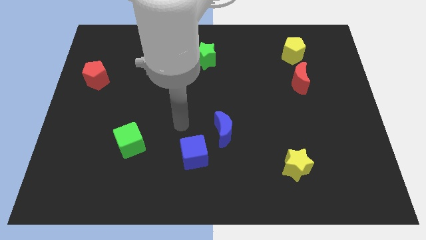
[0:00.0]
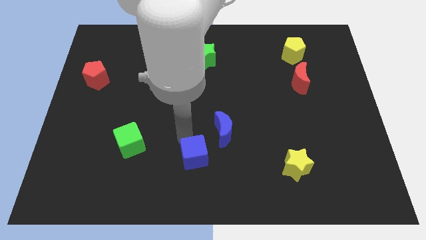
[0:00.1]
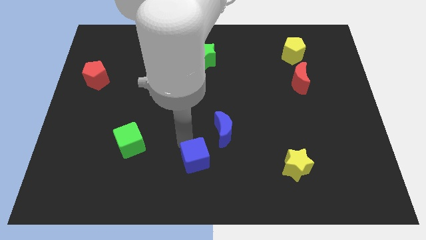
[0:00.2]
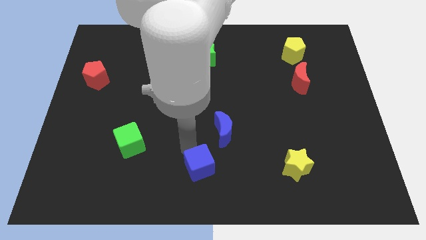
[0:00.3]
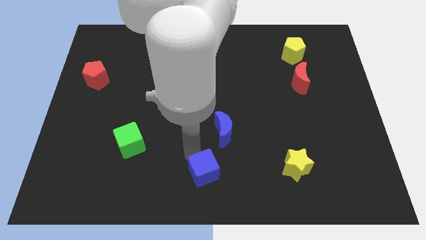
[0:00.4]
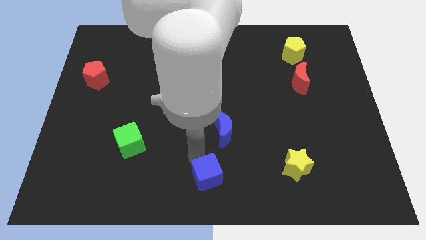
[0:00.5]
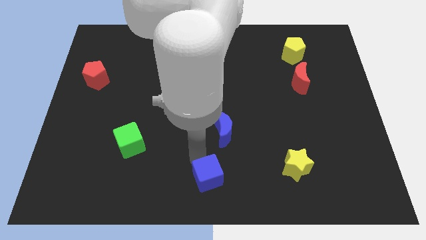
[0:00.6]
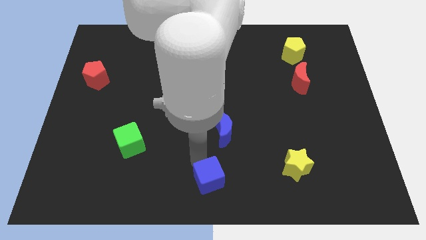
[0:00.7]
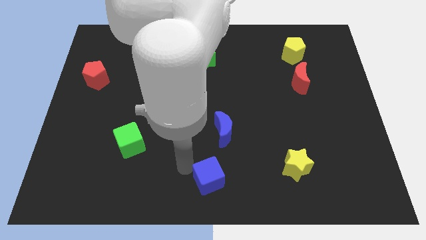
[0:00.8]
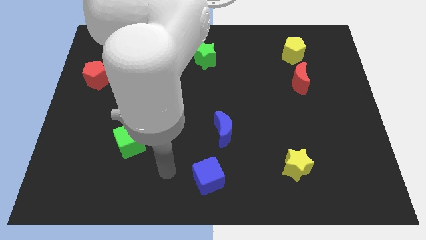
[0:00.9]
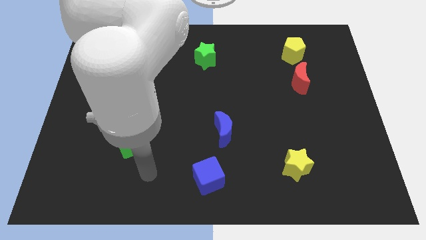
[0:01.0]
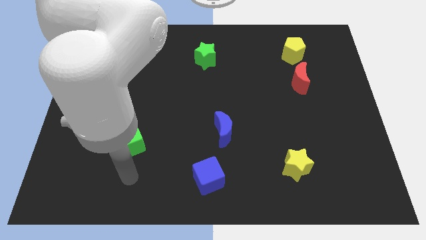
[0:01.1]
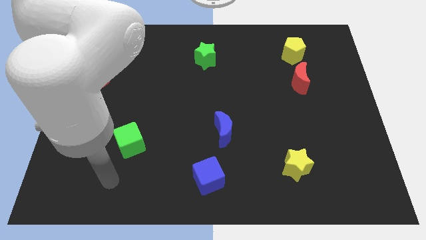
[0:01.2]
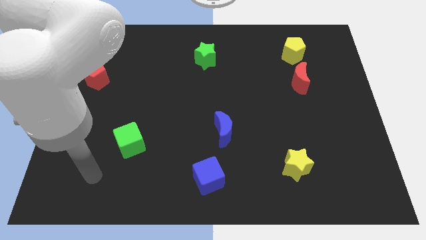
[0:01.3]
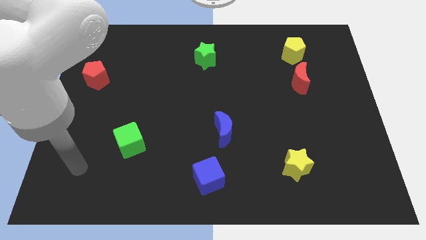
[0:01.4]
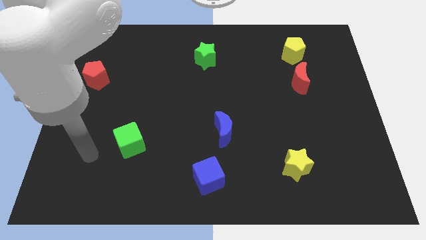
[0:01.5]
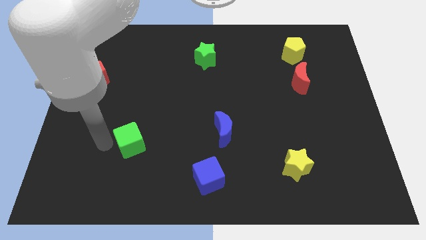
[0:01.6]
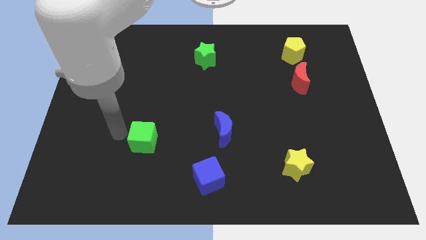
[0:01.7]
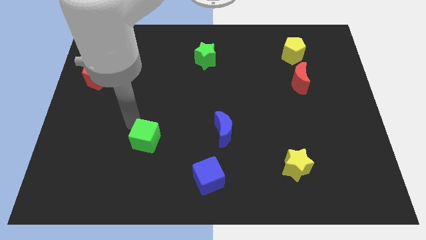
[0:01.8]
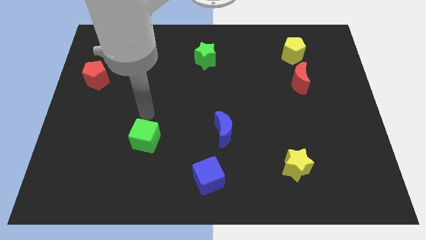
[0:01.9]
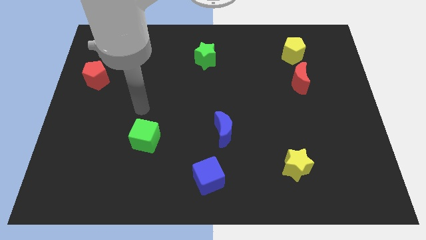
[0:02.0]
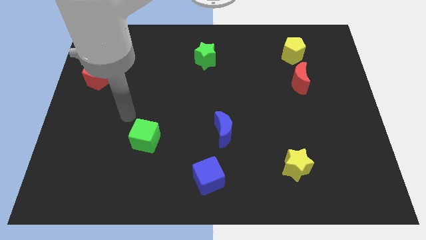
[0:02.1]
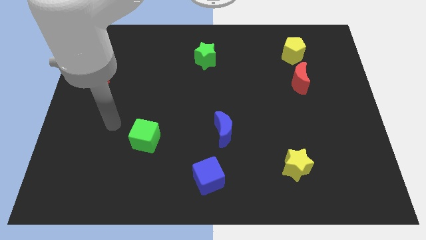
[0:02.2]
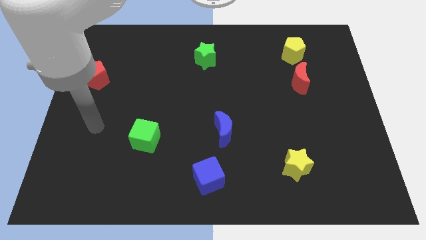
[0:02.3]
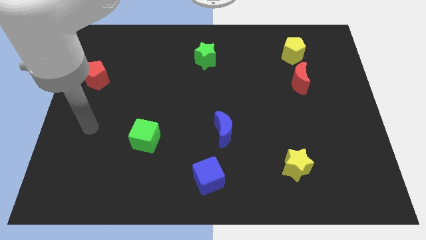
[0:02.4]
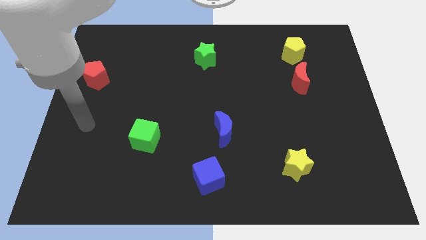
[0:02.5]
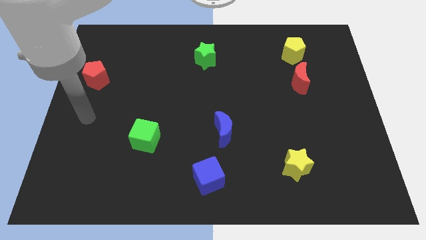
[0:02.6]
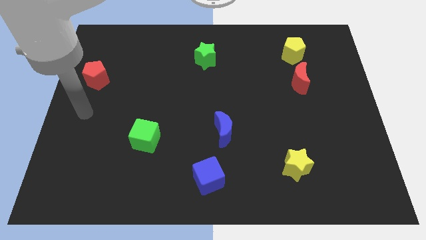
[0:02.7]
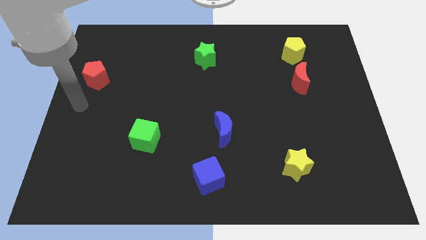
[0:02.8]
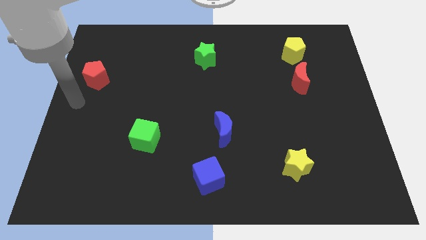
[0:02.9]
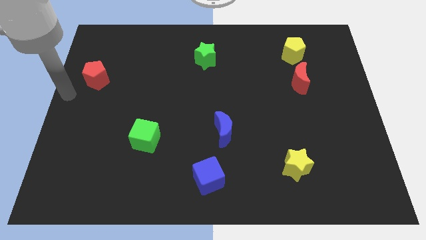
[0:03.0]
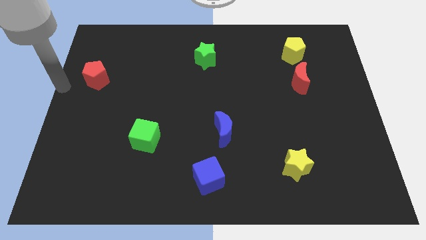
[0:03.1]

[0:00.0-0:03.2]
make a triangle with the blue blocks and green cube

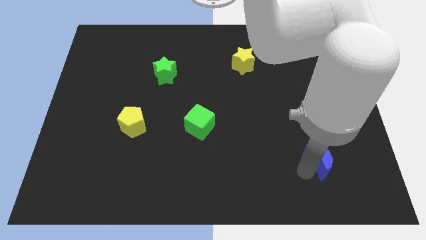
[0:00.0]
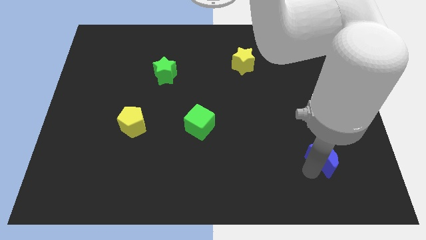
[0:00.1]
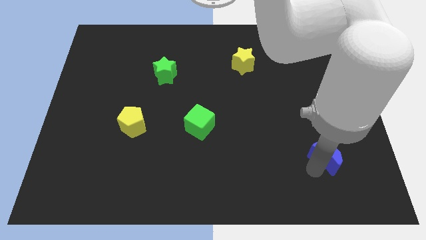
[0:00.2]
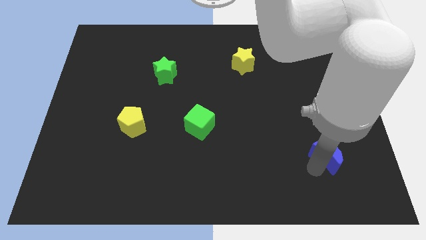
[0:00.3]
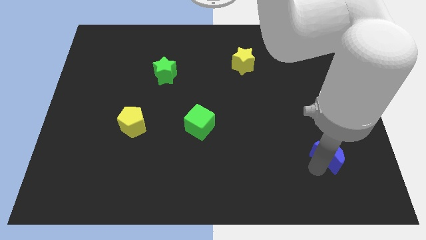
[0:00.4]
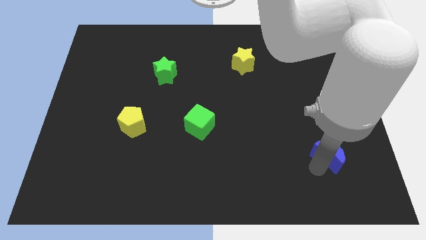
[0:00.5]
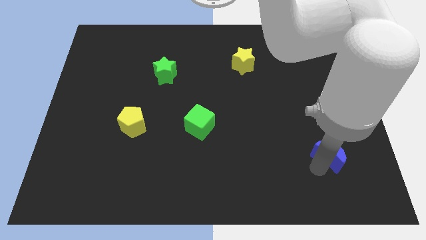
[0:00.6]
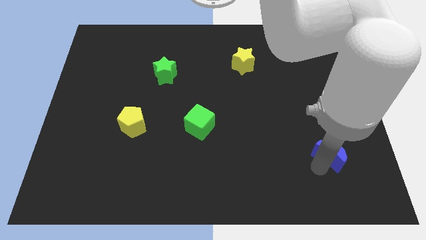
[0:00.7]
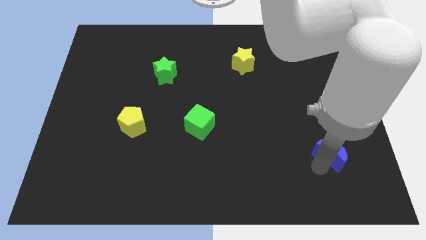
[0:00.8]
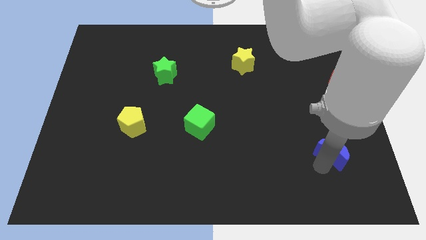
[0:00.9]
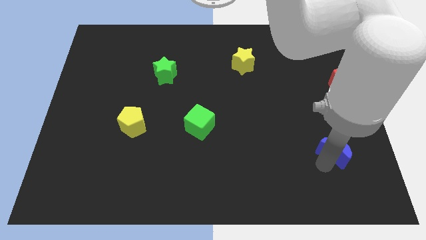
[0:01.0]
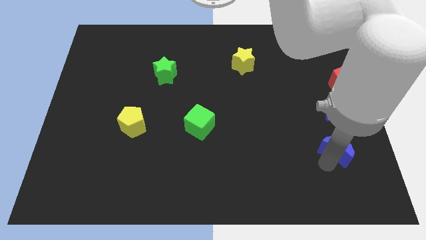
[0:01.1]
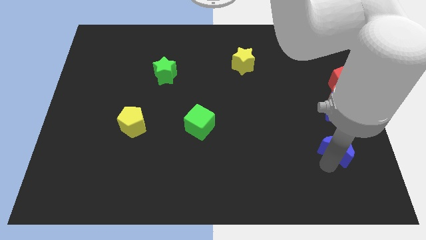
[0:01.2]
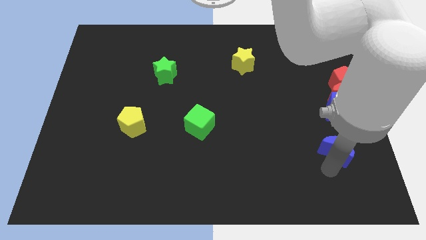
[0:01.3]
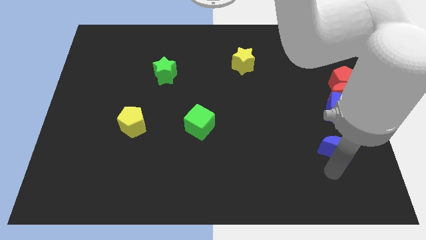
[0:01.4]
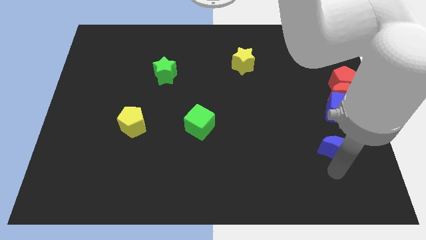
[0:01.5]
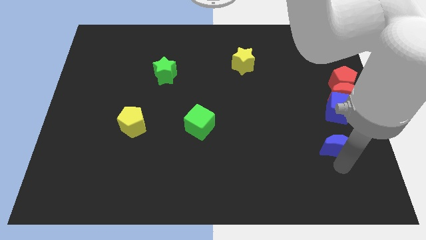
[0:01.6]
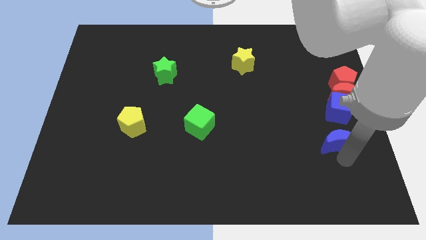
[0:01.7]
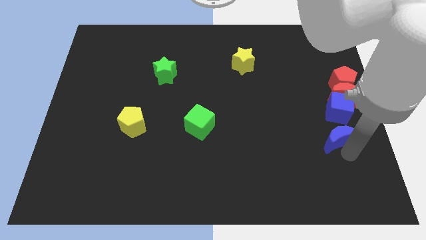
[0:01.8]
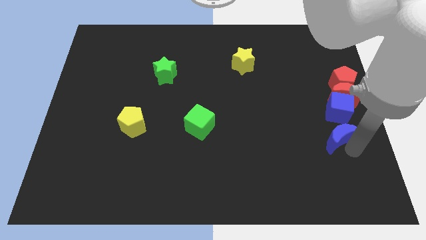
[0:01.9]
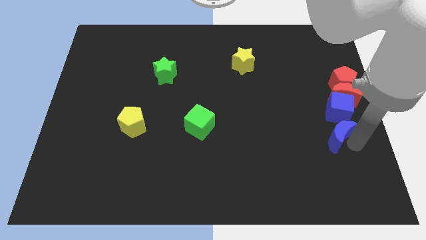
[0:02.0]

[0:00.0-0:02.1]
place the blue crescent below the blue cube

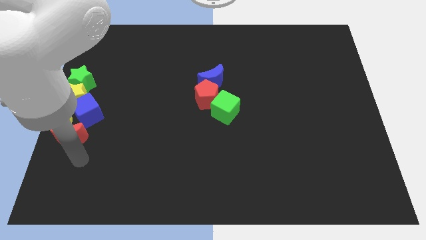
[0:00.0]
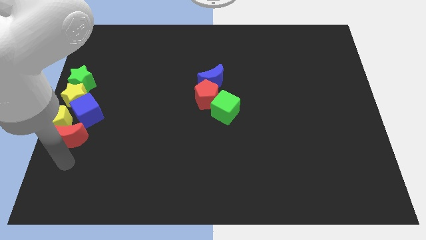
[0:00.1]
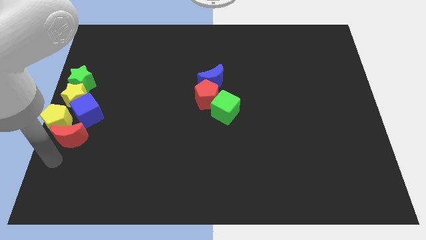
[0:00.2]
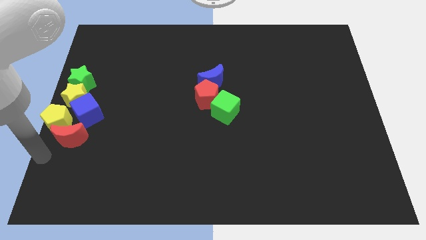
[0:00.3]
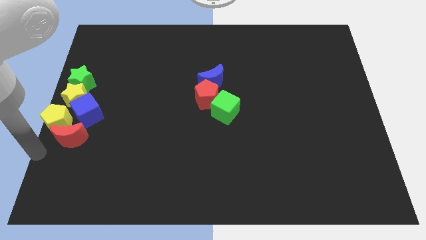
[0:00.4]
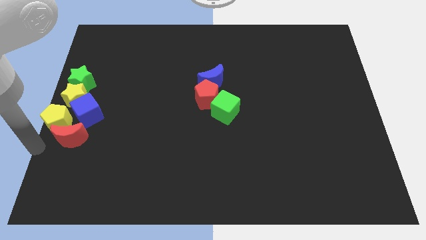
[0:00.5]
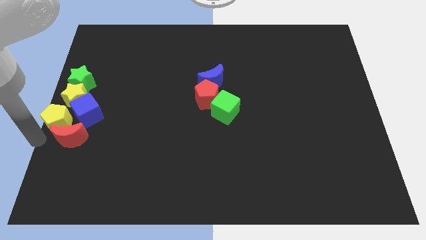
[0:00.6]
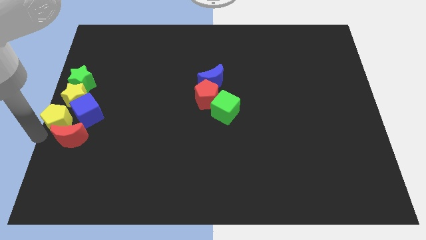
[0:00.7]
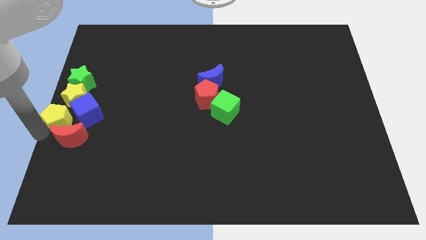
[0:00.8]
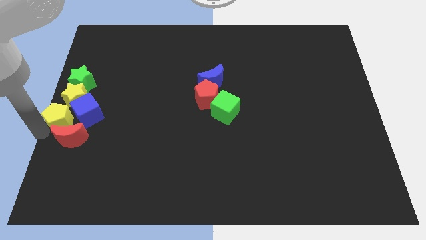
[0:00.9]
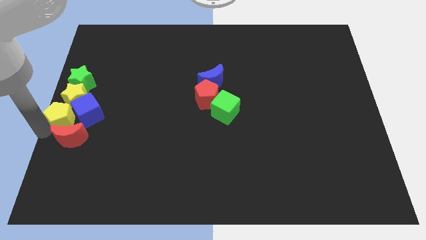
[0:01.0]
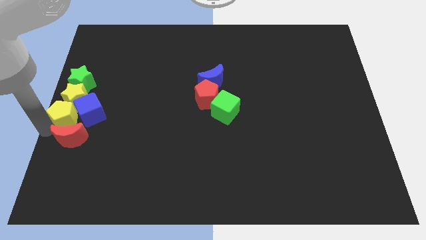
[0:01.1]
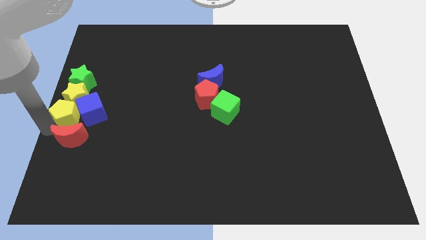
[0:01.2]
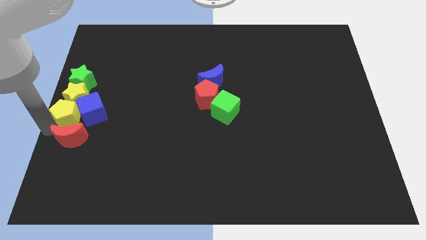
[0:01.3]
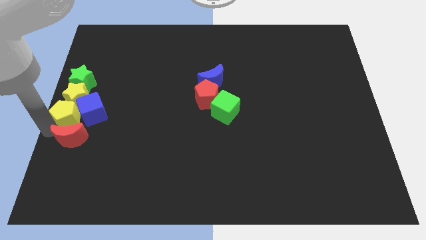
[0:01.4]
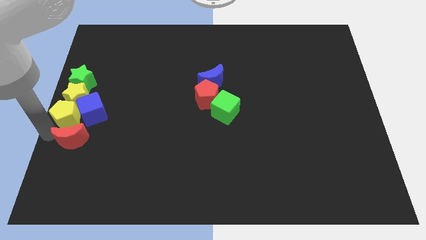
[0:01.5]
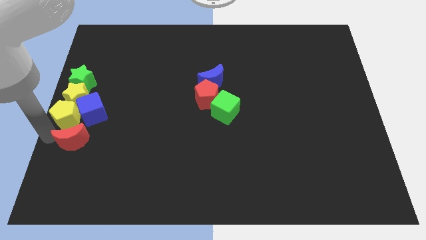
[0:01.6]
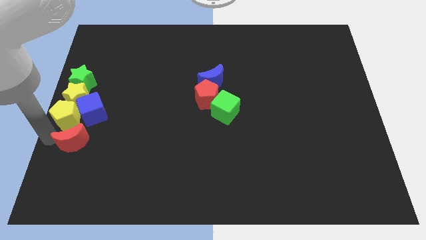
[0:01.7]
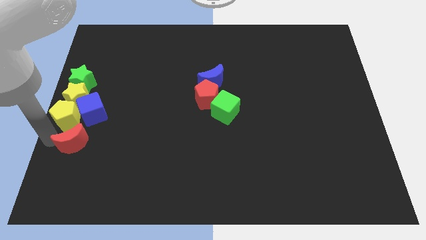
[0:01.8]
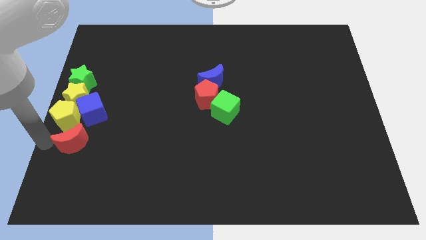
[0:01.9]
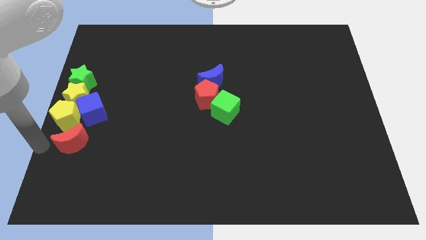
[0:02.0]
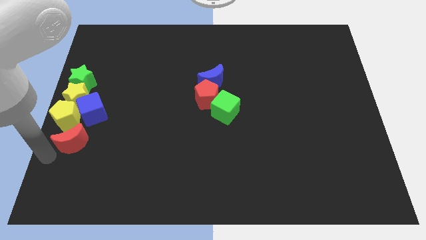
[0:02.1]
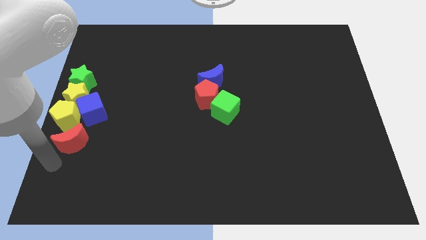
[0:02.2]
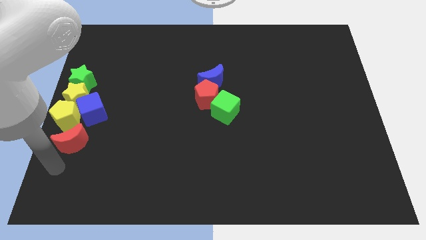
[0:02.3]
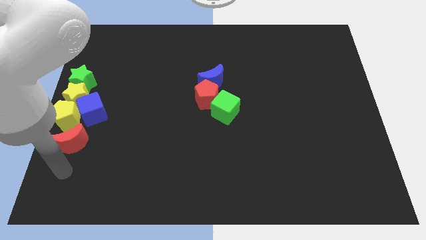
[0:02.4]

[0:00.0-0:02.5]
move the yellow pentagon to the bottom side of the yellow star

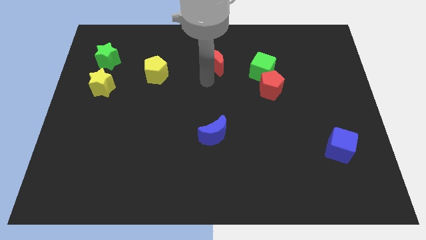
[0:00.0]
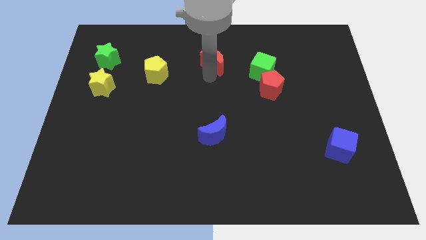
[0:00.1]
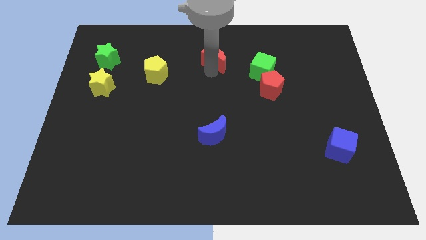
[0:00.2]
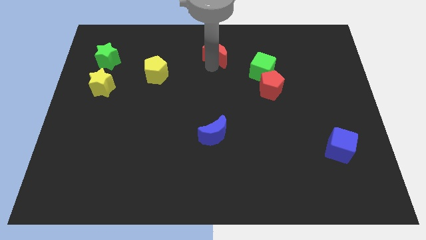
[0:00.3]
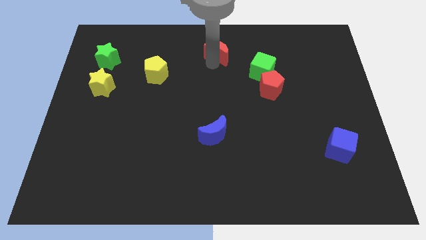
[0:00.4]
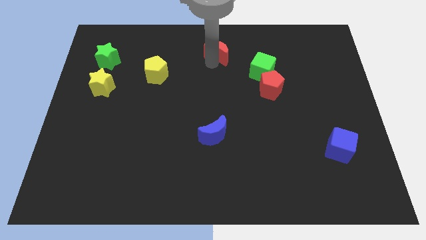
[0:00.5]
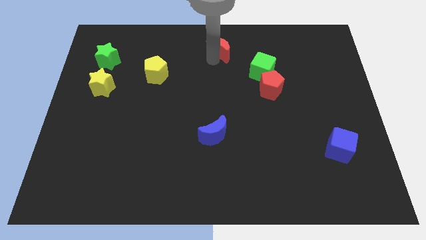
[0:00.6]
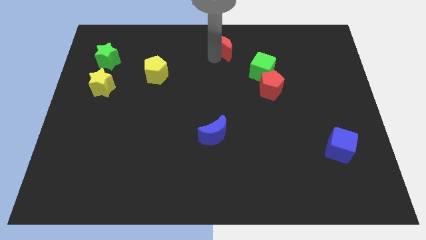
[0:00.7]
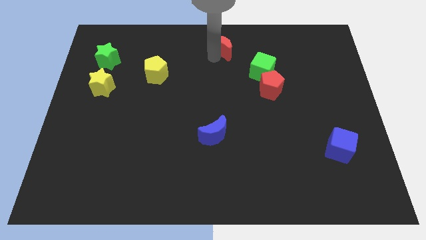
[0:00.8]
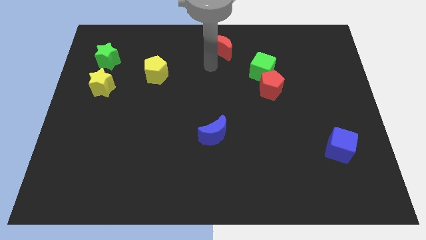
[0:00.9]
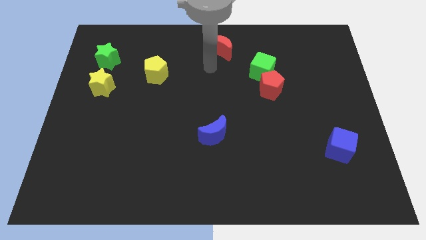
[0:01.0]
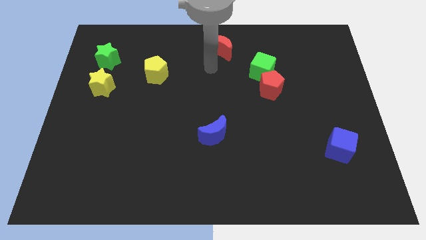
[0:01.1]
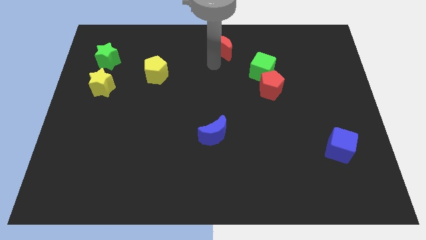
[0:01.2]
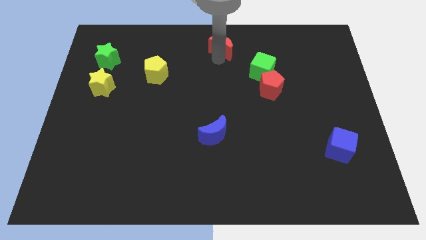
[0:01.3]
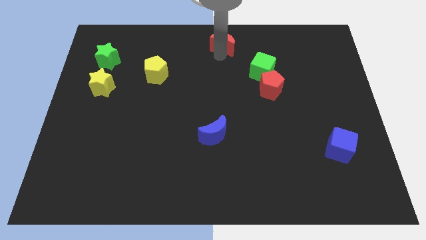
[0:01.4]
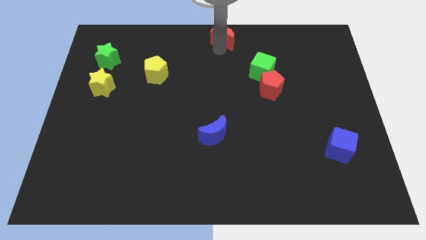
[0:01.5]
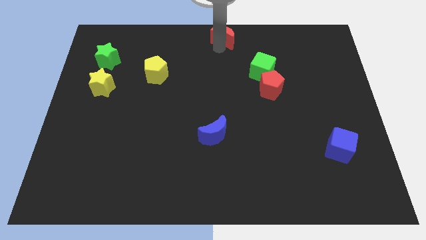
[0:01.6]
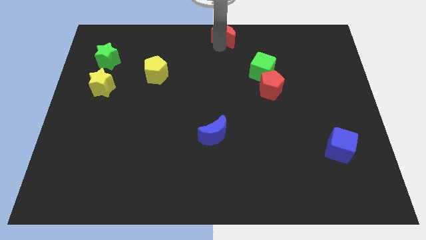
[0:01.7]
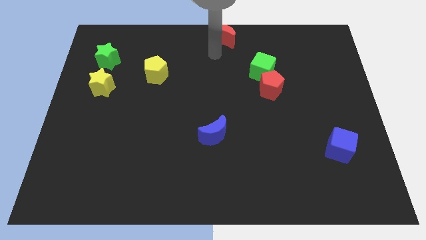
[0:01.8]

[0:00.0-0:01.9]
move the red crescent to the top center
